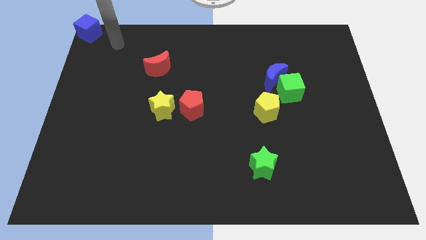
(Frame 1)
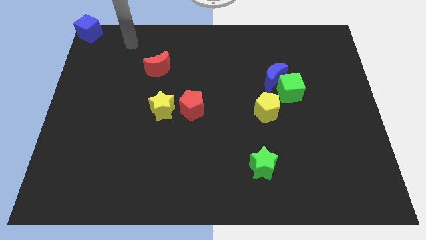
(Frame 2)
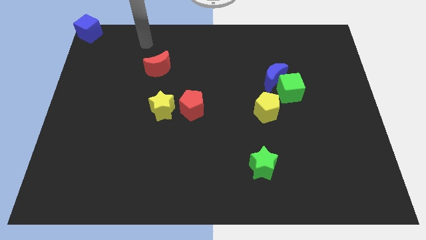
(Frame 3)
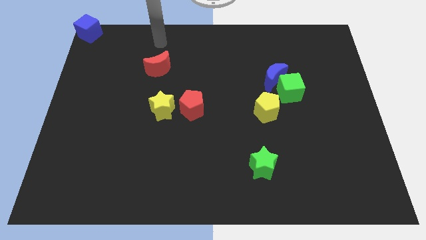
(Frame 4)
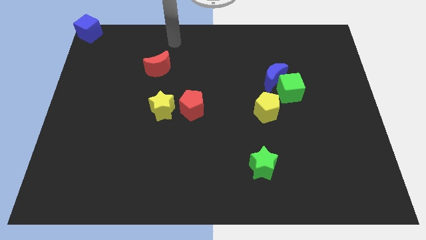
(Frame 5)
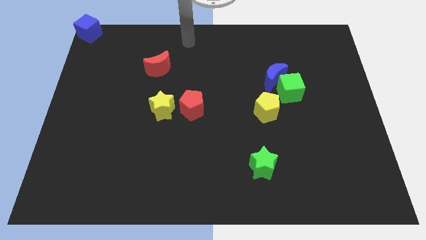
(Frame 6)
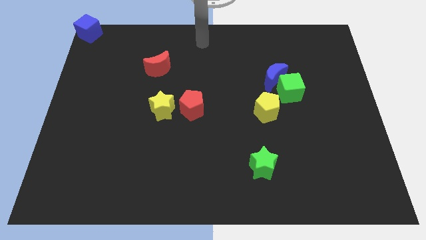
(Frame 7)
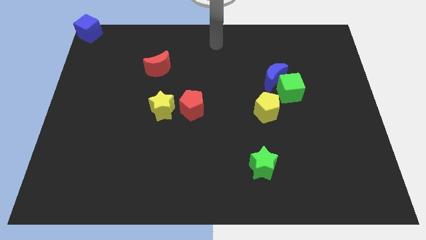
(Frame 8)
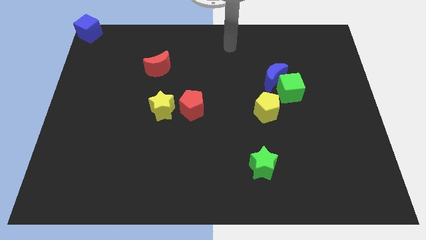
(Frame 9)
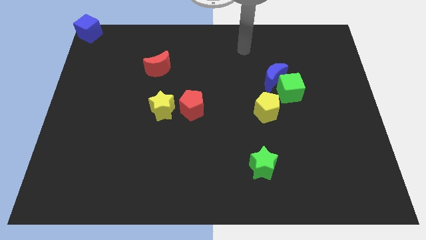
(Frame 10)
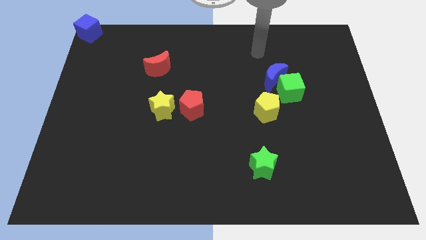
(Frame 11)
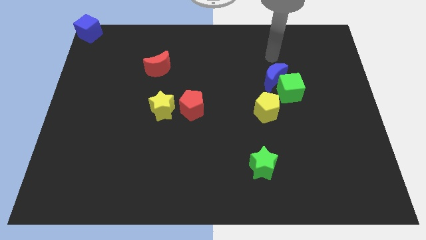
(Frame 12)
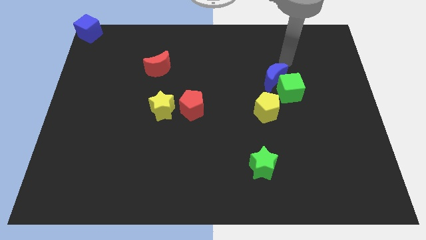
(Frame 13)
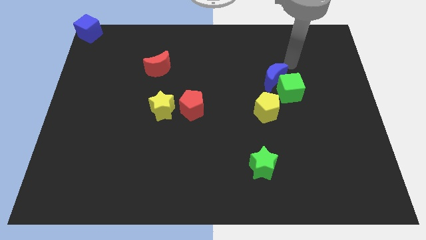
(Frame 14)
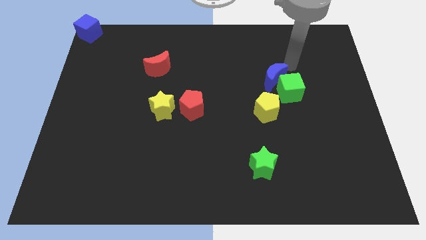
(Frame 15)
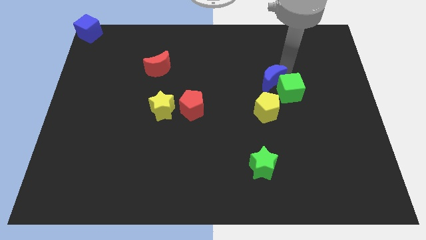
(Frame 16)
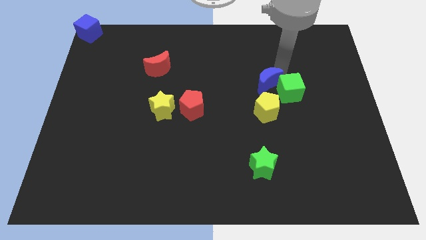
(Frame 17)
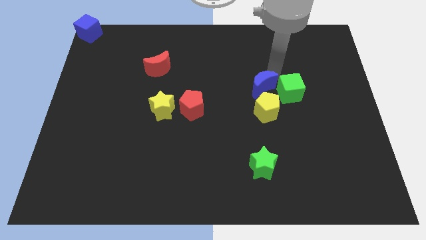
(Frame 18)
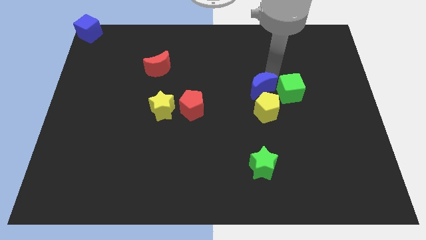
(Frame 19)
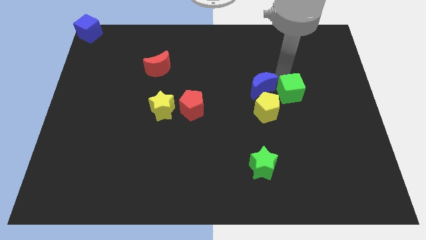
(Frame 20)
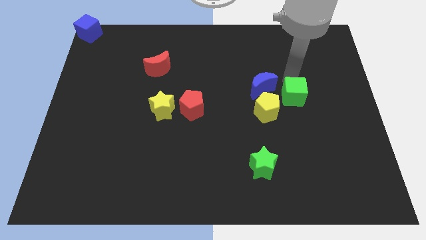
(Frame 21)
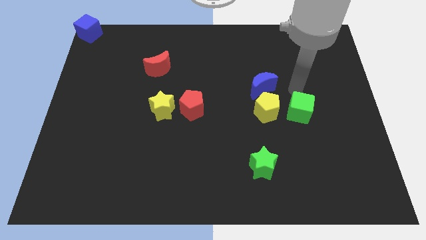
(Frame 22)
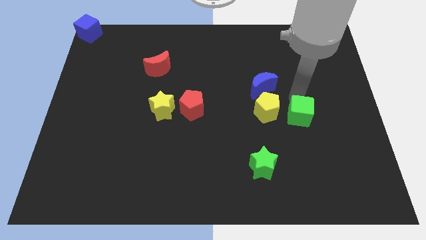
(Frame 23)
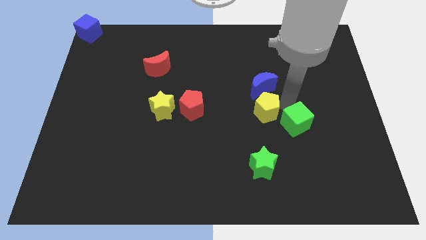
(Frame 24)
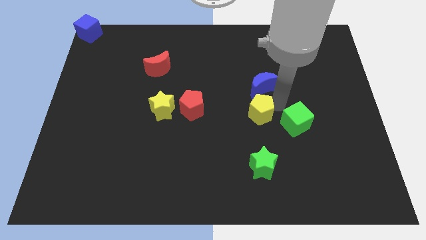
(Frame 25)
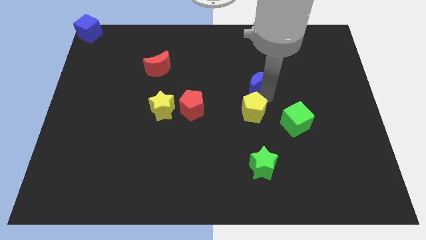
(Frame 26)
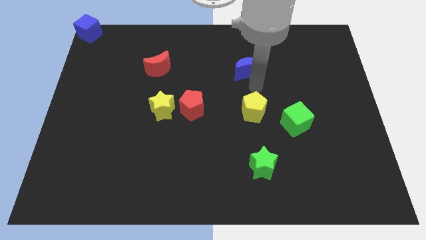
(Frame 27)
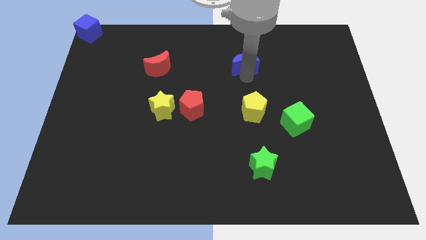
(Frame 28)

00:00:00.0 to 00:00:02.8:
separate the blue moon green cube and yellow pentagon from each others

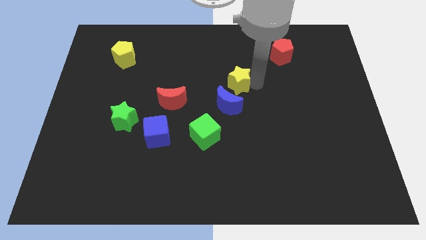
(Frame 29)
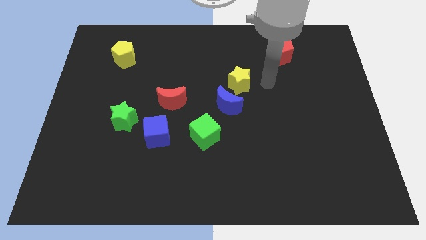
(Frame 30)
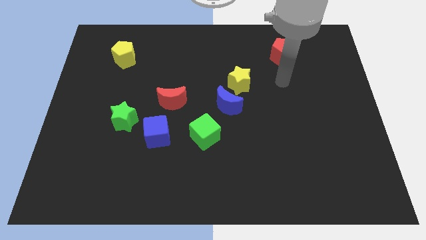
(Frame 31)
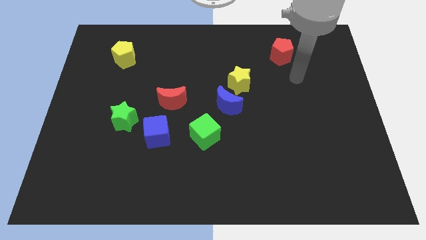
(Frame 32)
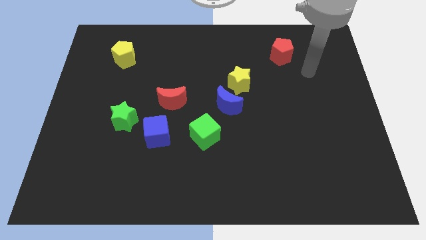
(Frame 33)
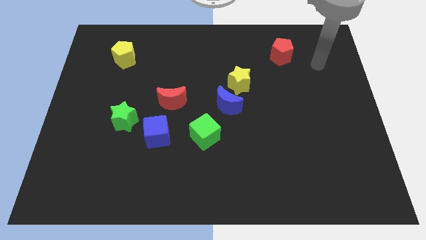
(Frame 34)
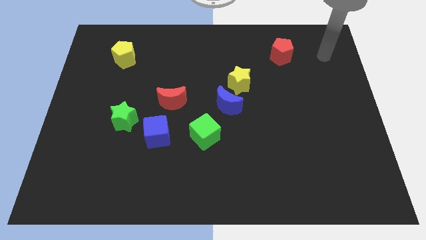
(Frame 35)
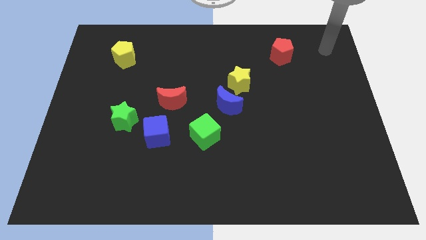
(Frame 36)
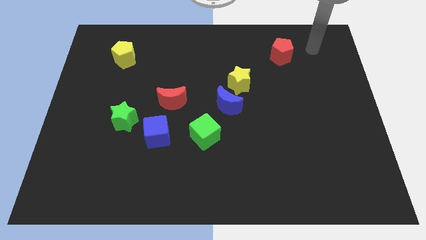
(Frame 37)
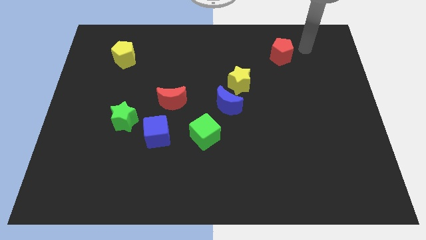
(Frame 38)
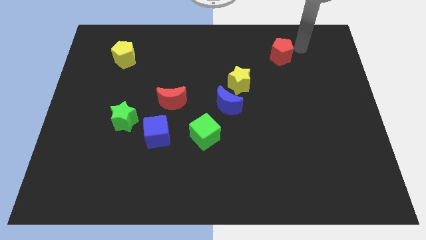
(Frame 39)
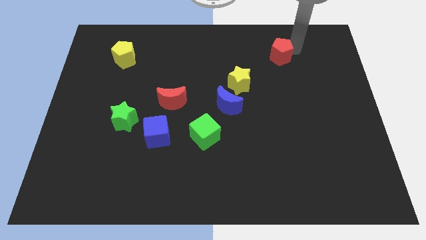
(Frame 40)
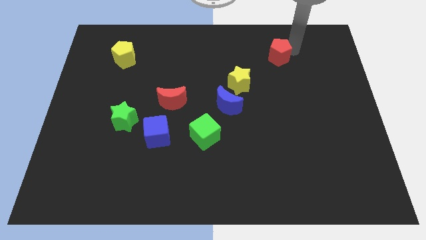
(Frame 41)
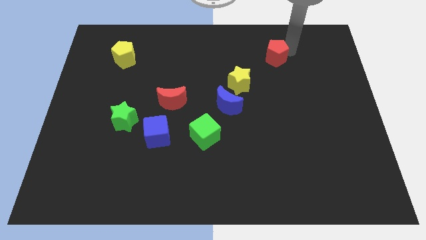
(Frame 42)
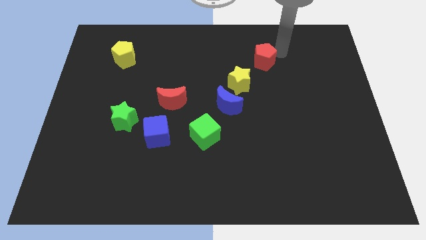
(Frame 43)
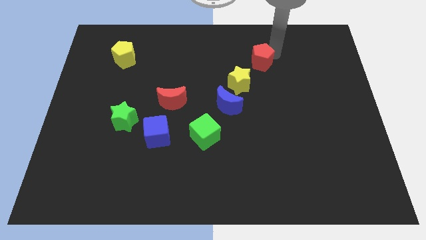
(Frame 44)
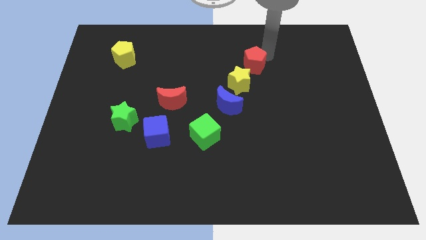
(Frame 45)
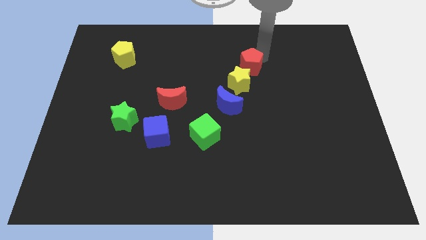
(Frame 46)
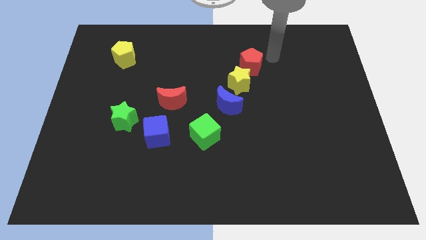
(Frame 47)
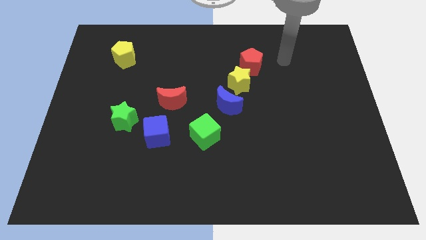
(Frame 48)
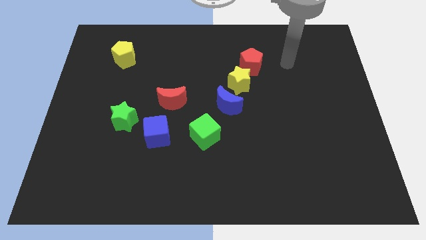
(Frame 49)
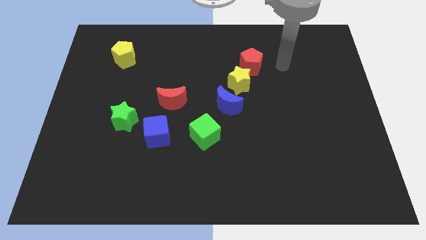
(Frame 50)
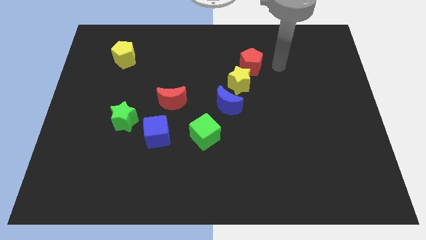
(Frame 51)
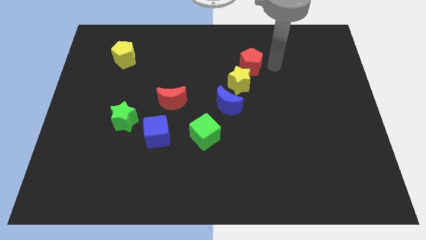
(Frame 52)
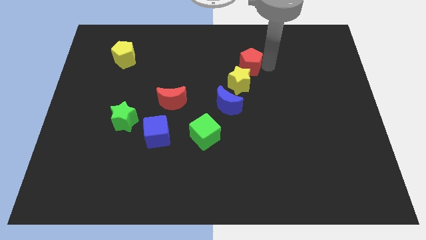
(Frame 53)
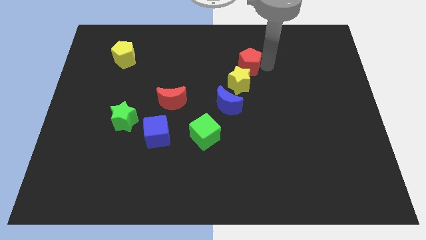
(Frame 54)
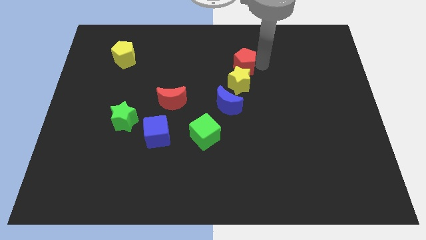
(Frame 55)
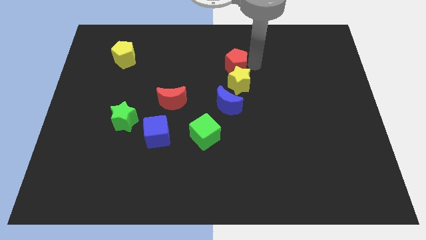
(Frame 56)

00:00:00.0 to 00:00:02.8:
push the red pentagon above the yellow star

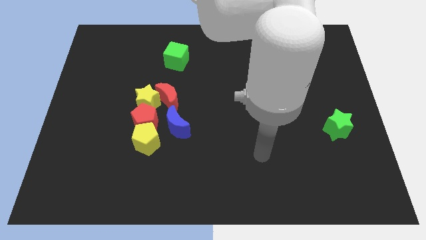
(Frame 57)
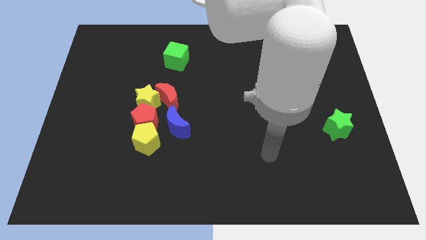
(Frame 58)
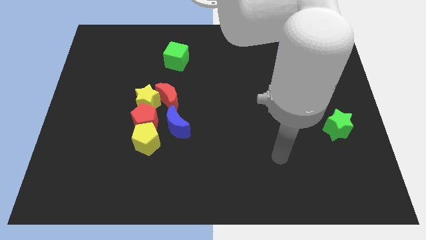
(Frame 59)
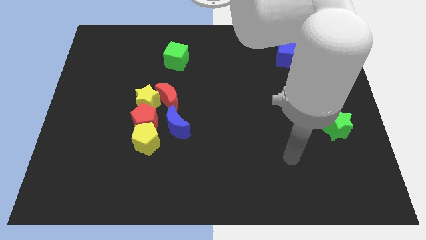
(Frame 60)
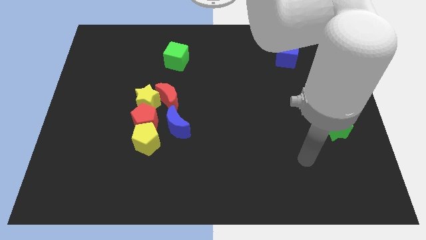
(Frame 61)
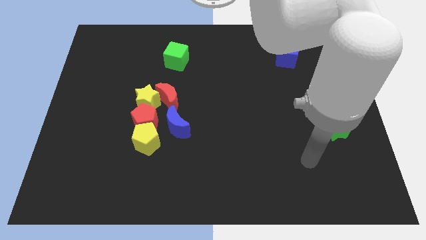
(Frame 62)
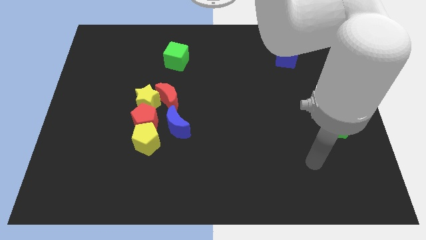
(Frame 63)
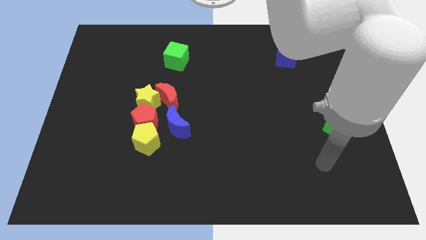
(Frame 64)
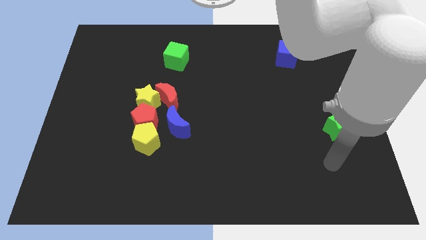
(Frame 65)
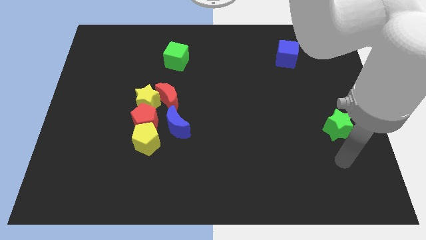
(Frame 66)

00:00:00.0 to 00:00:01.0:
move the arm towards the bottom of the green star

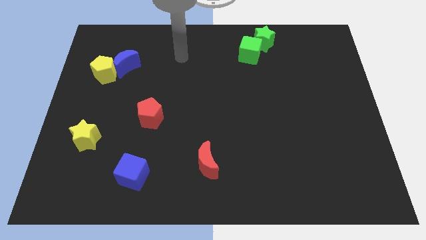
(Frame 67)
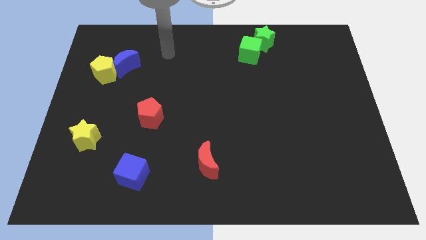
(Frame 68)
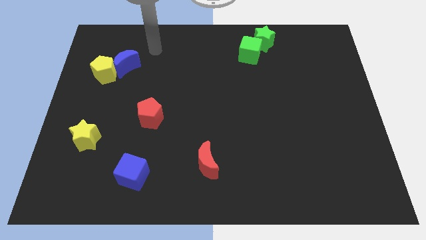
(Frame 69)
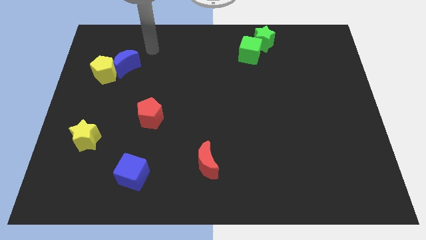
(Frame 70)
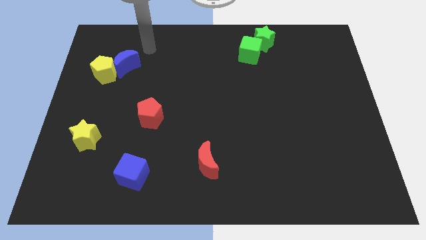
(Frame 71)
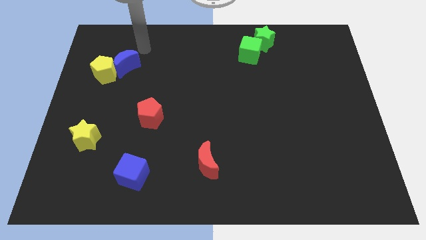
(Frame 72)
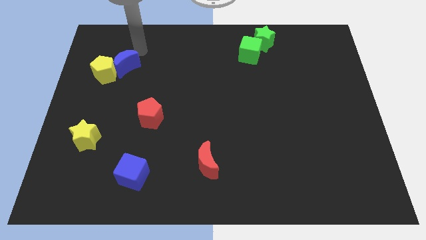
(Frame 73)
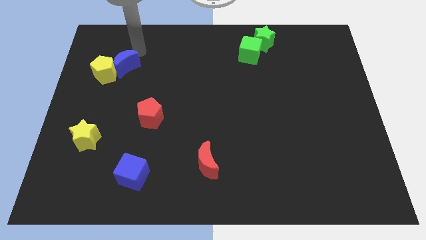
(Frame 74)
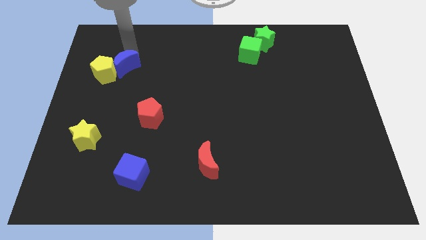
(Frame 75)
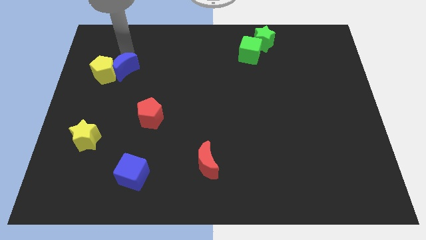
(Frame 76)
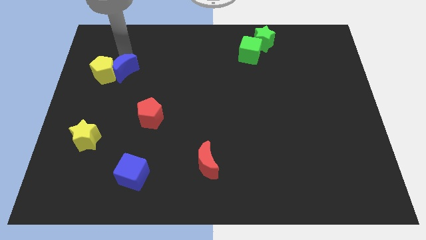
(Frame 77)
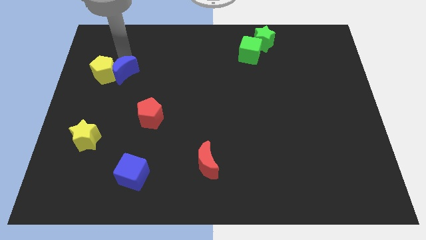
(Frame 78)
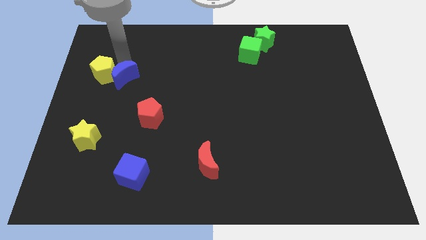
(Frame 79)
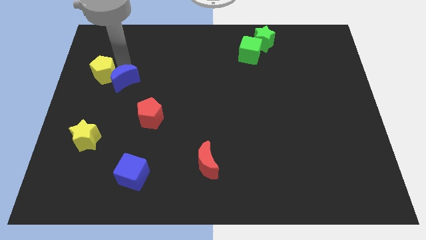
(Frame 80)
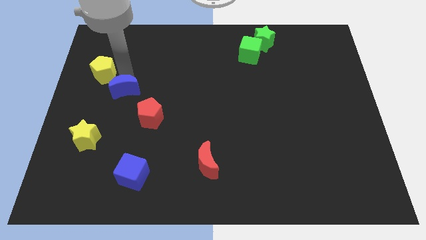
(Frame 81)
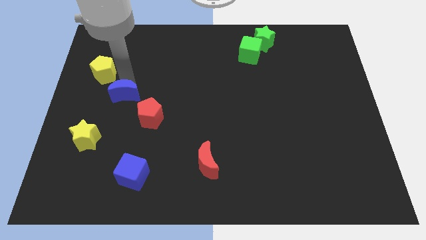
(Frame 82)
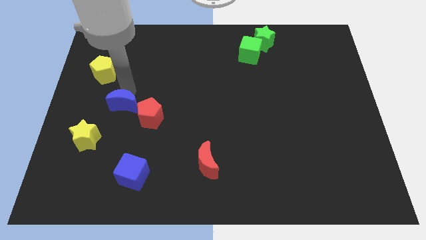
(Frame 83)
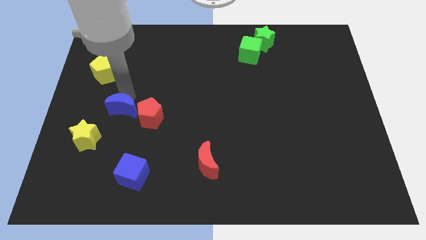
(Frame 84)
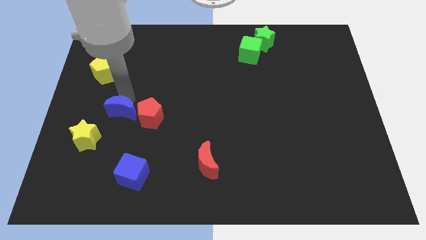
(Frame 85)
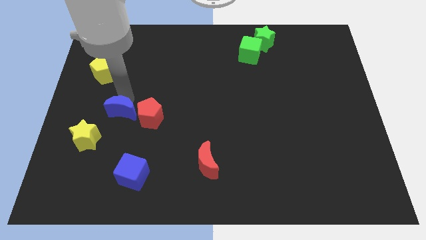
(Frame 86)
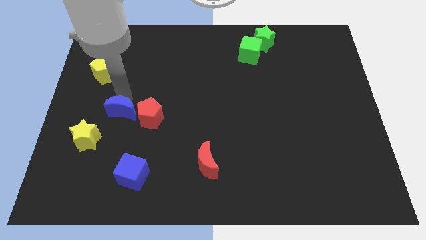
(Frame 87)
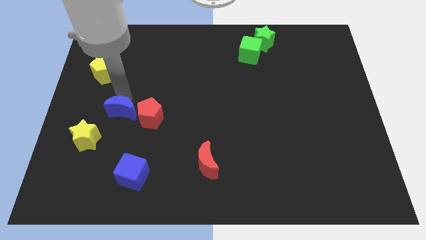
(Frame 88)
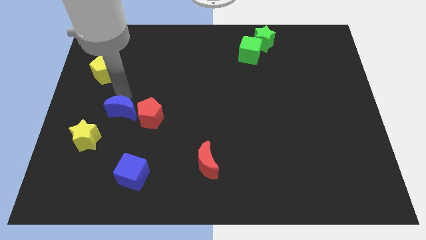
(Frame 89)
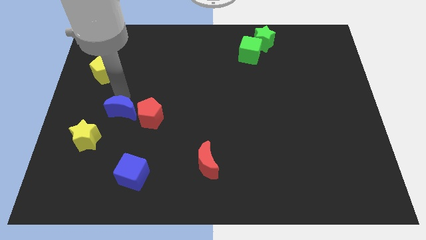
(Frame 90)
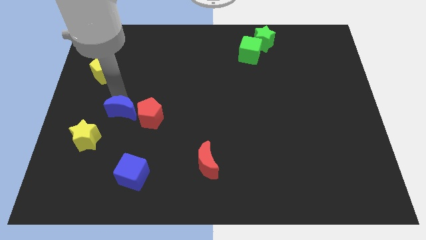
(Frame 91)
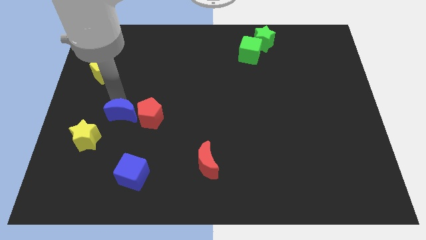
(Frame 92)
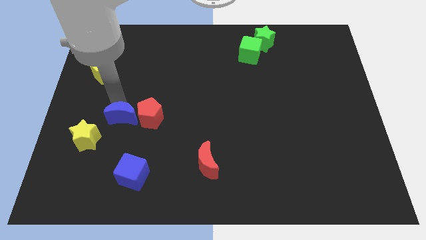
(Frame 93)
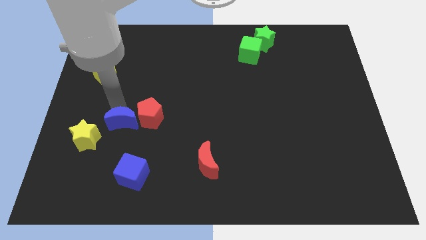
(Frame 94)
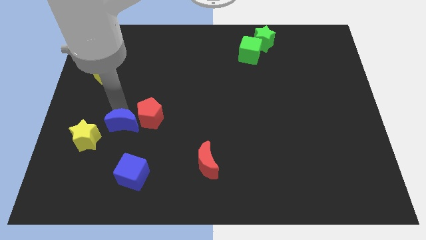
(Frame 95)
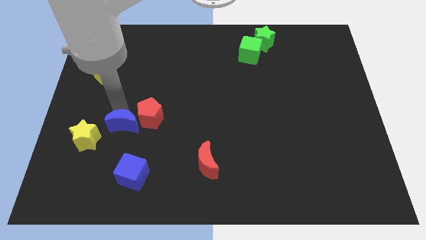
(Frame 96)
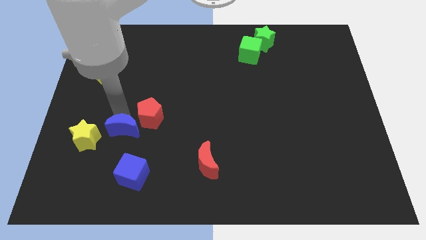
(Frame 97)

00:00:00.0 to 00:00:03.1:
separate the blue semi circle from the yellow pentagon
